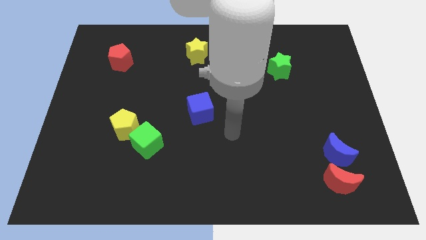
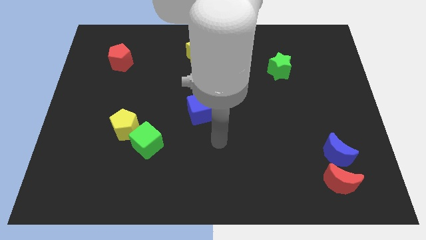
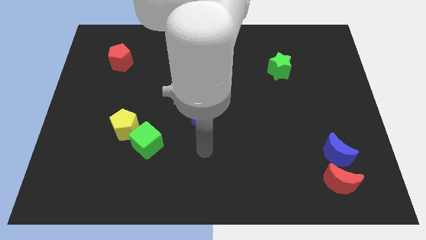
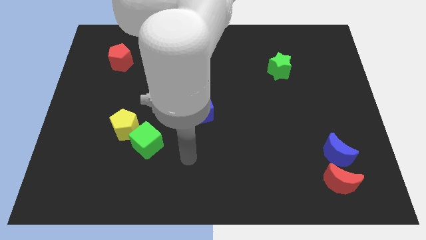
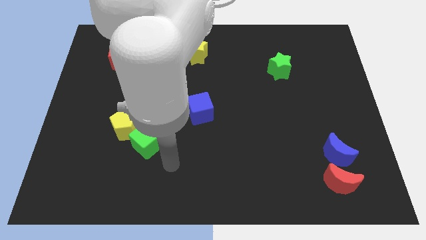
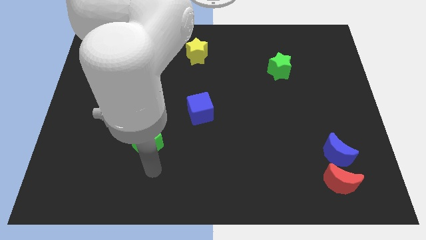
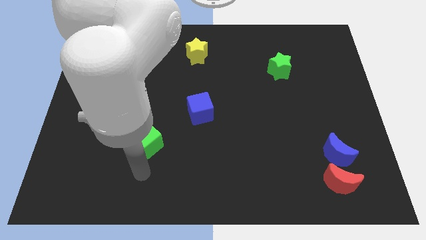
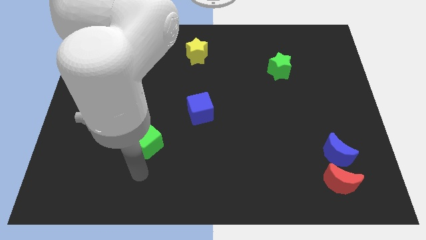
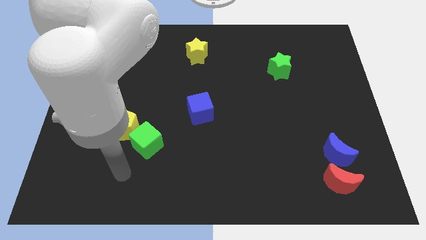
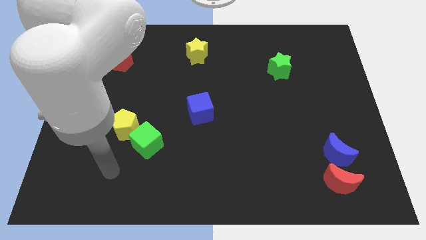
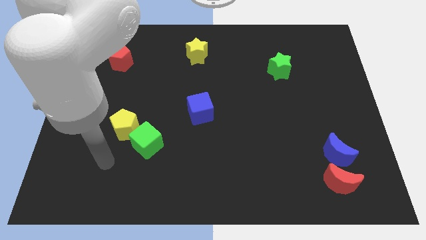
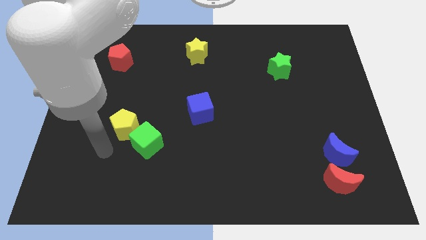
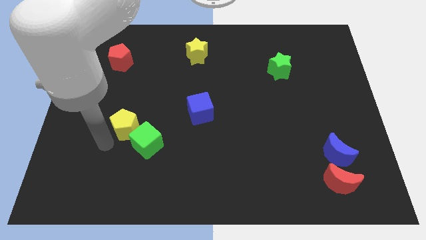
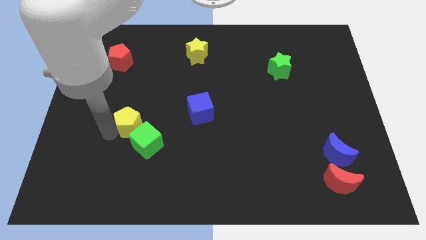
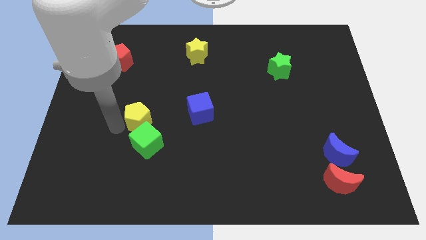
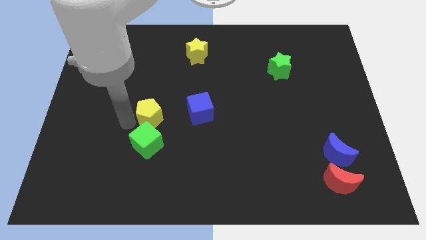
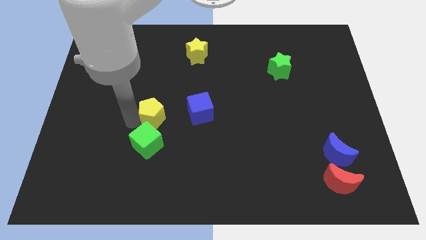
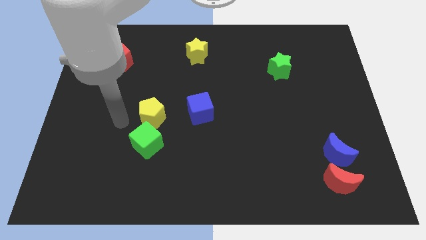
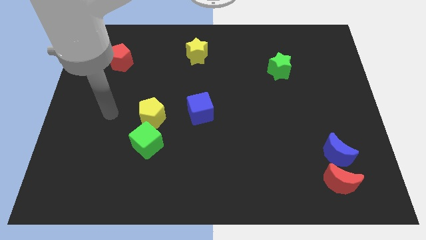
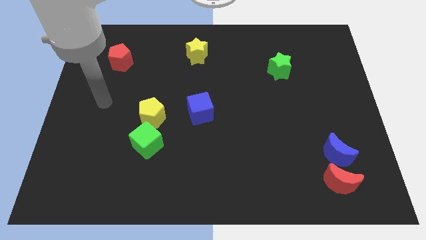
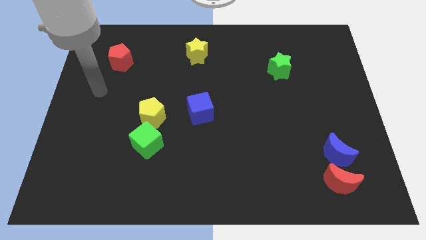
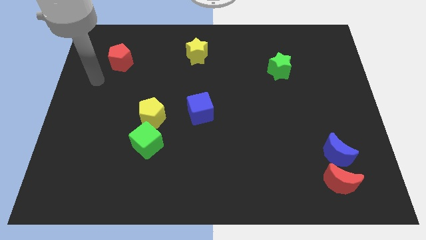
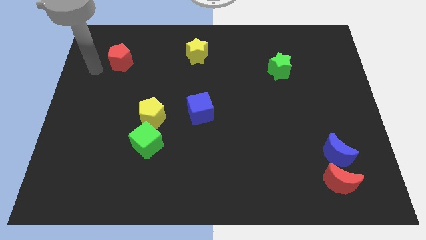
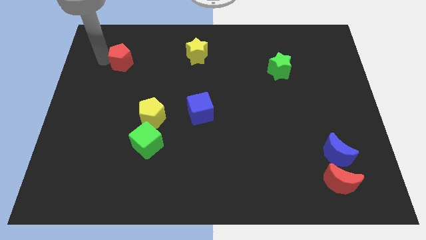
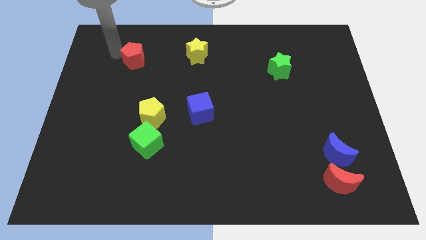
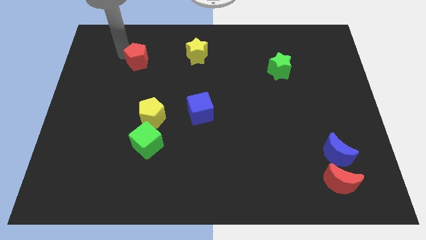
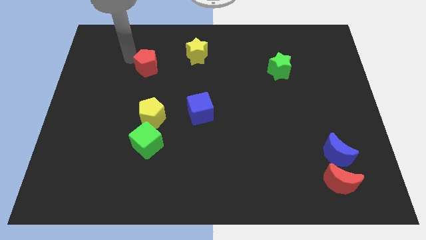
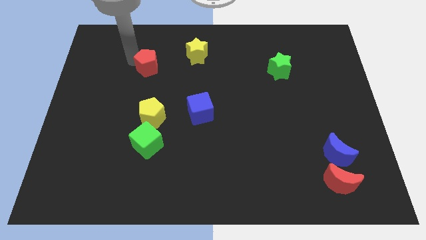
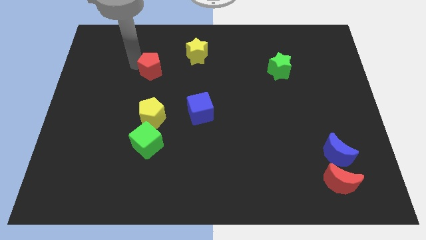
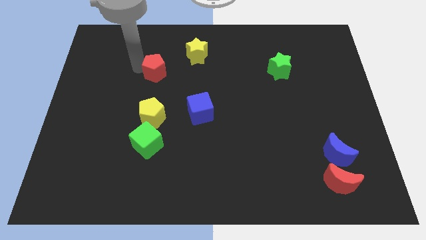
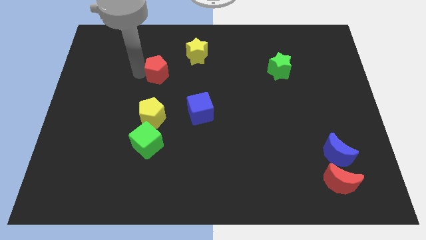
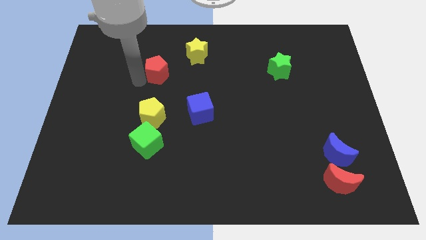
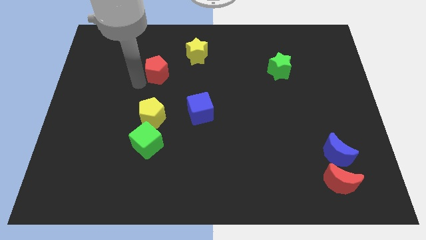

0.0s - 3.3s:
move the red pentagon vertically above the top side of the yellow pentagon

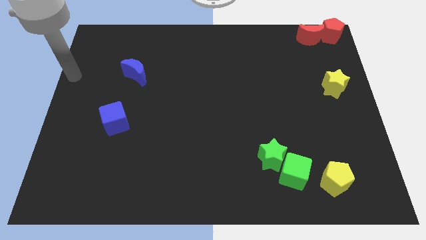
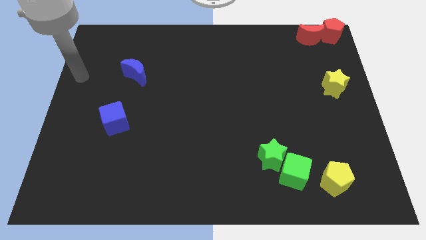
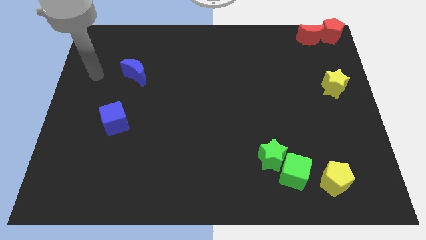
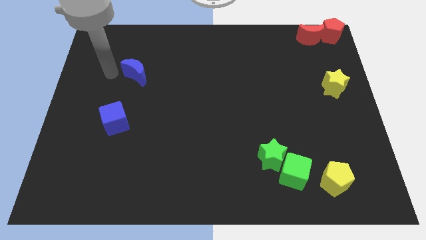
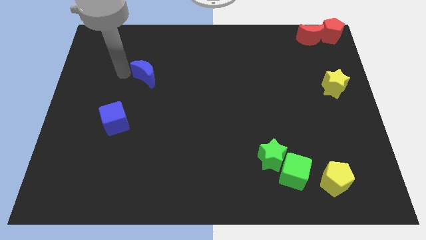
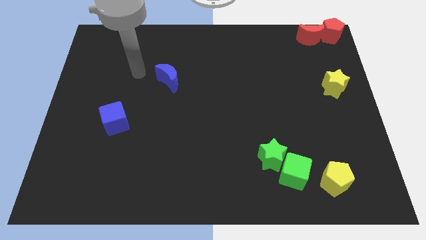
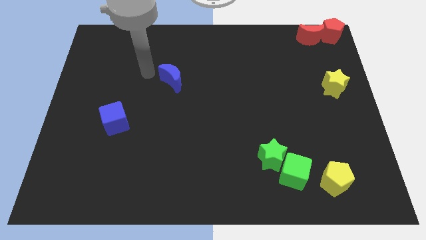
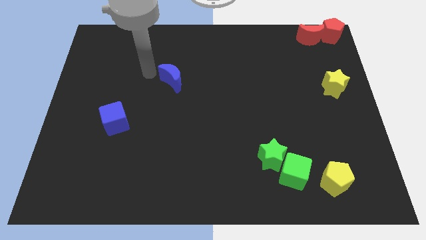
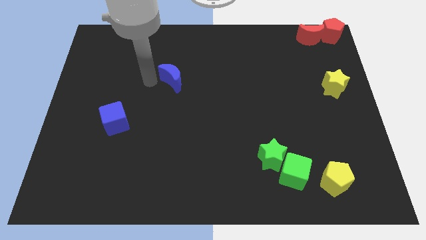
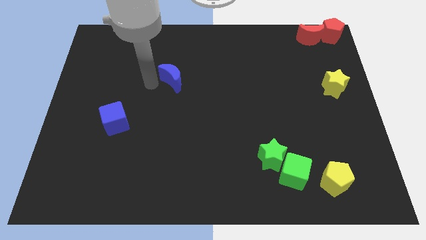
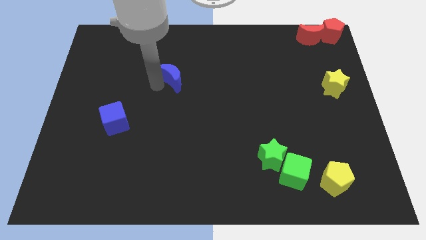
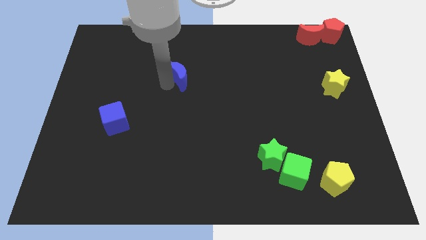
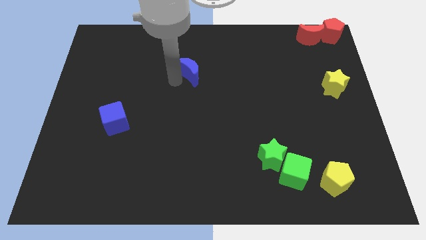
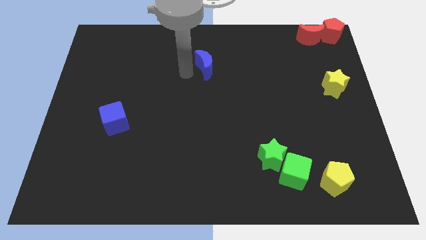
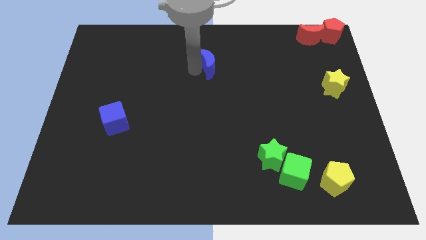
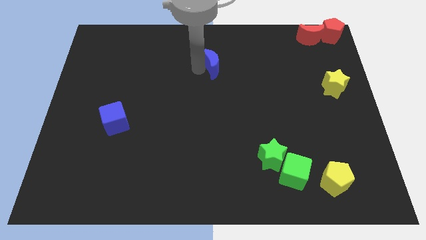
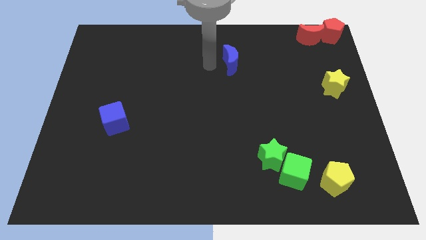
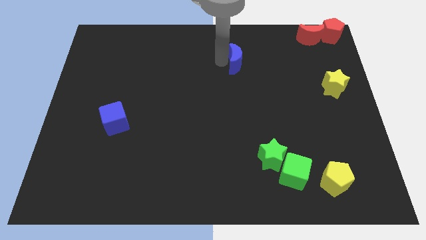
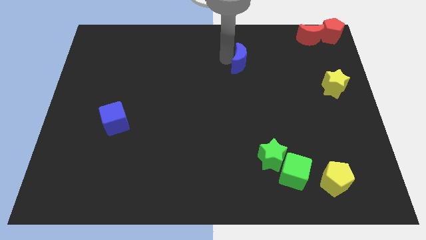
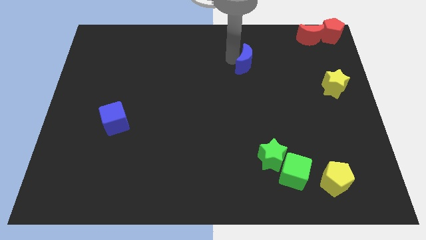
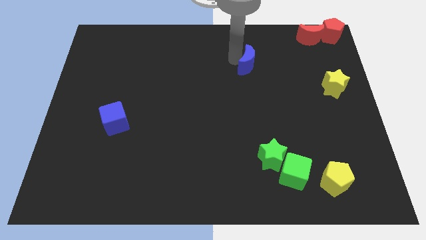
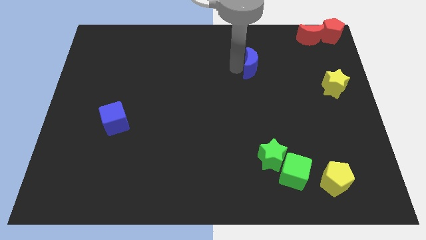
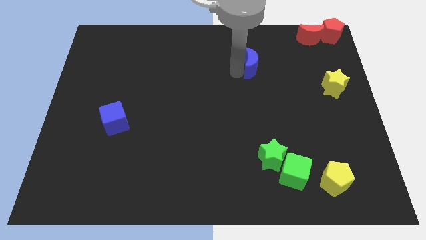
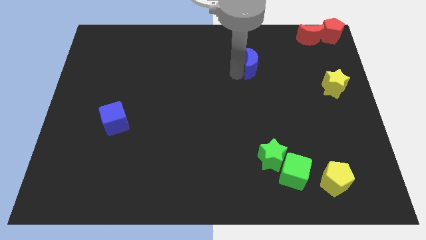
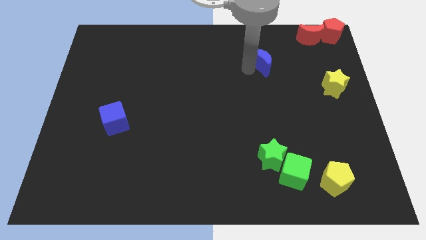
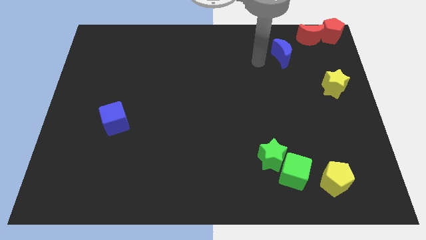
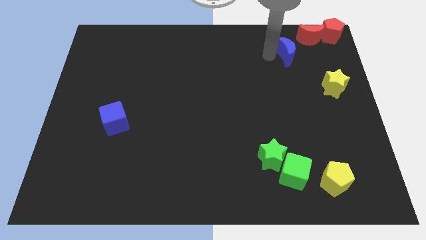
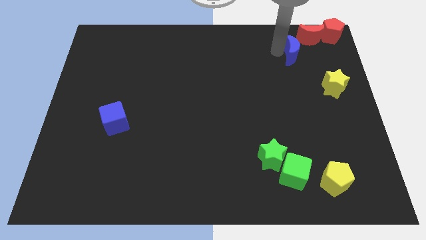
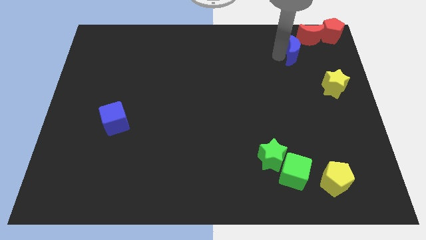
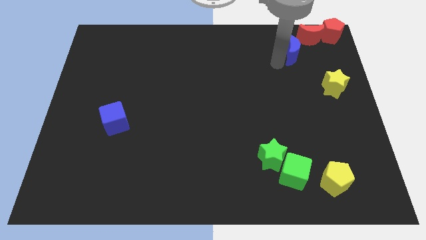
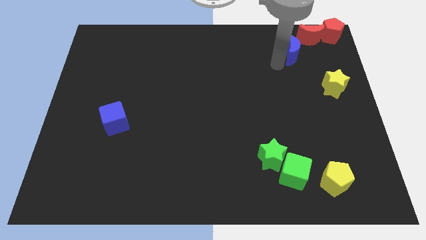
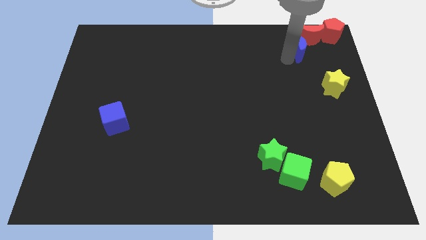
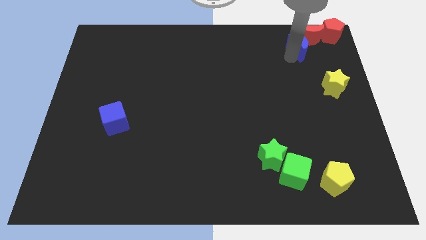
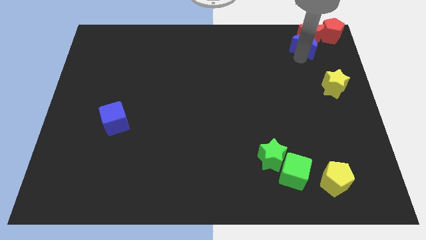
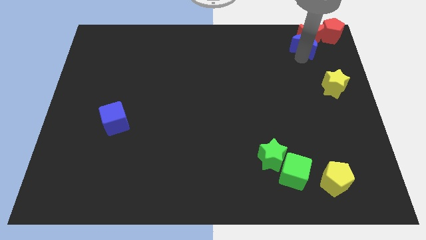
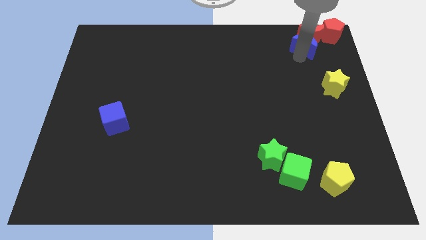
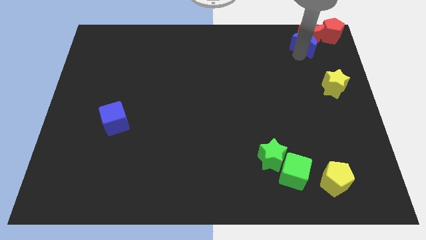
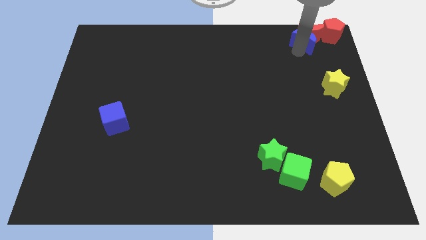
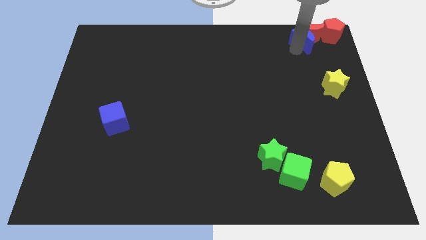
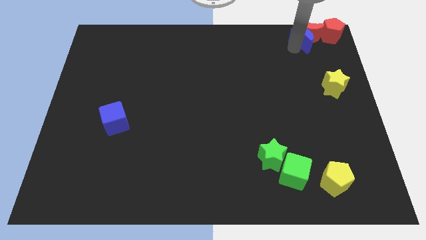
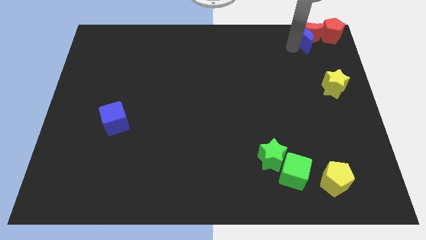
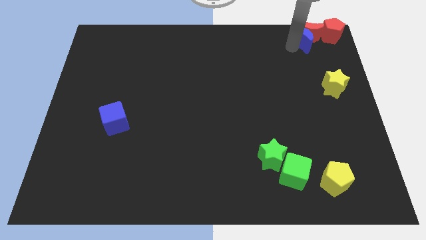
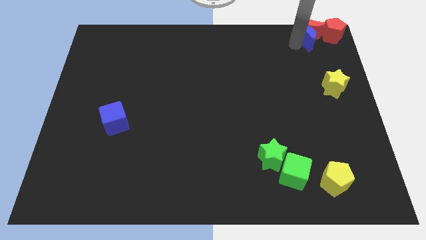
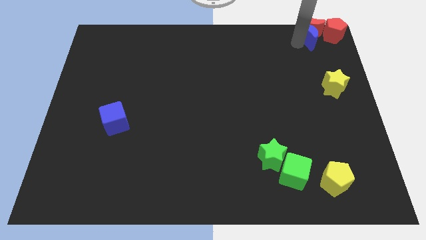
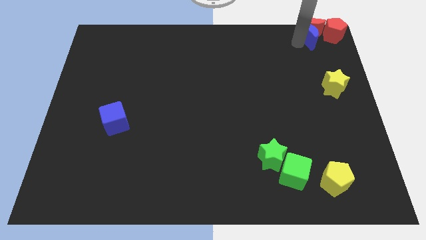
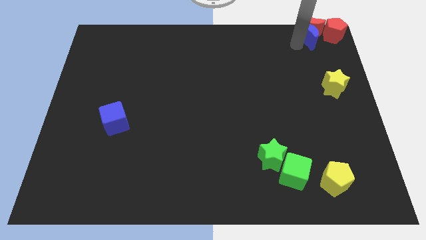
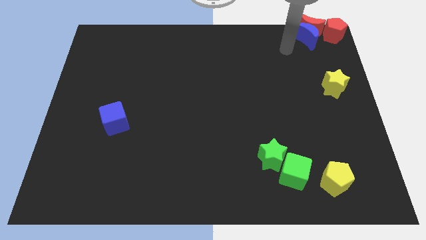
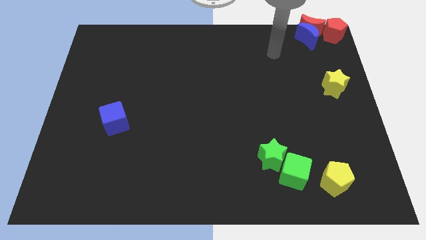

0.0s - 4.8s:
push the blue crescent at the bottom of the red crescent

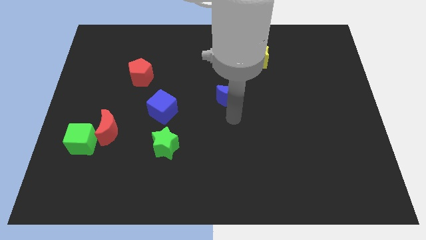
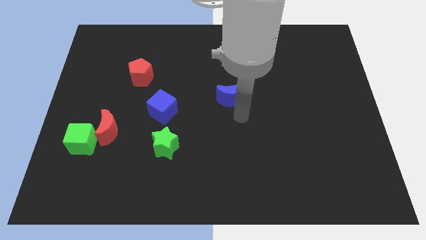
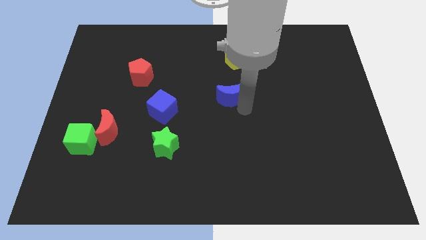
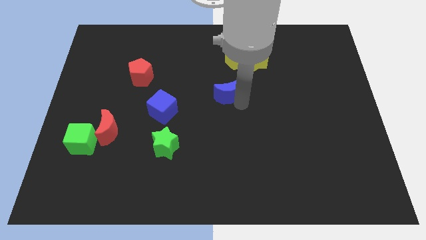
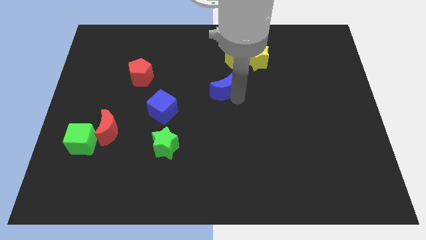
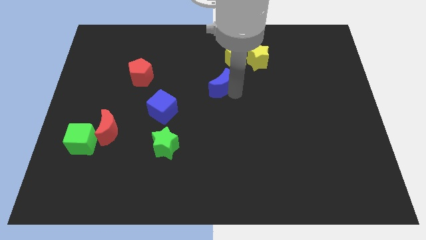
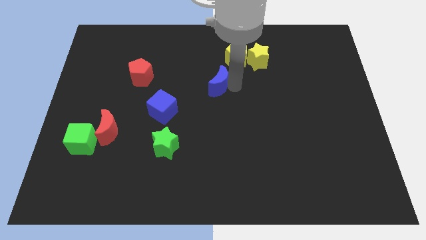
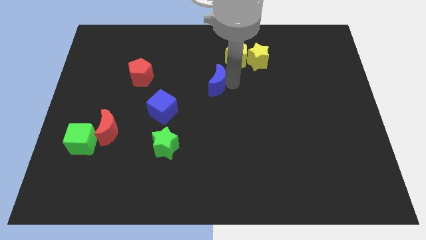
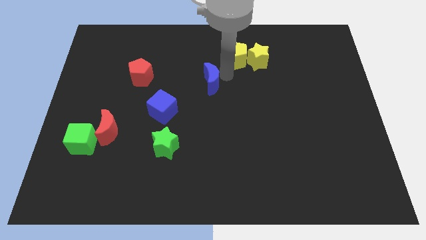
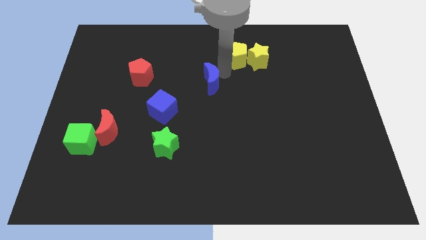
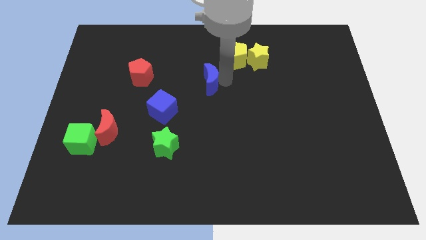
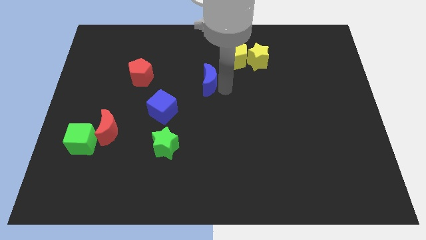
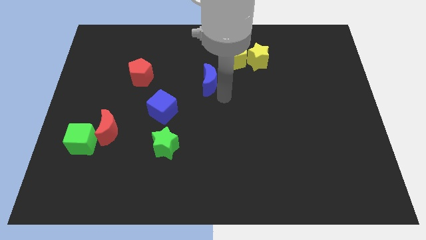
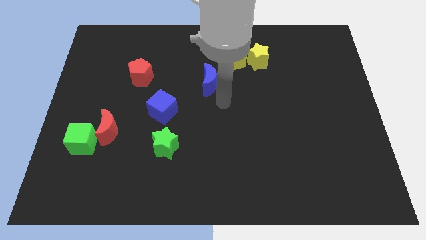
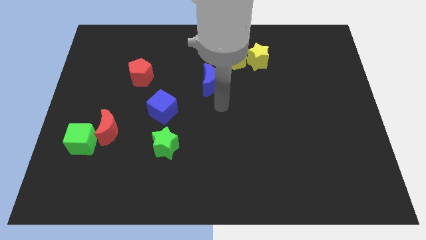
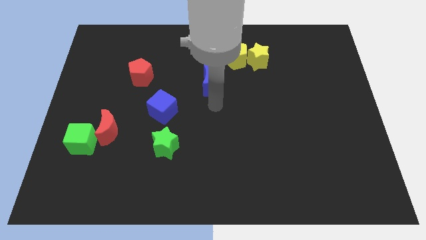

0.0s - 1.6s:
place the blue crescent in between blue cube and yellow pentagon
